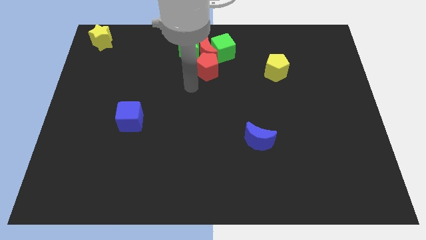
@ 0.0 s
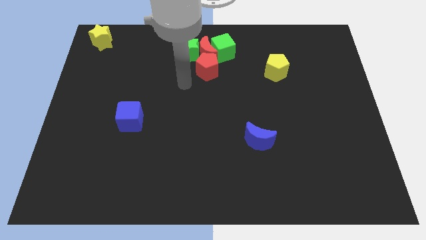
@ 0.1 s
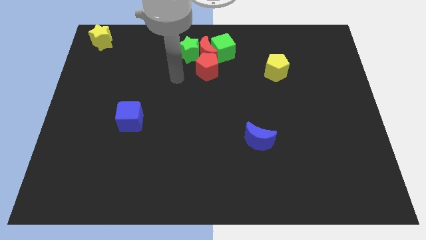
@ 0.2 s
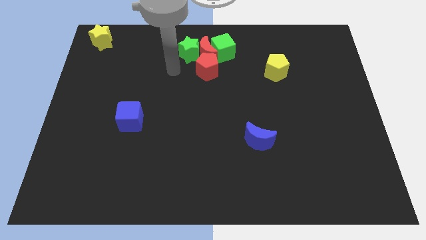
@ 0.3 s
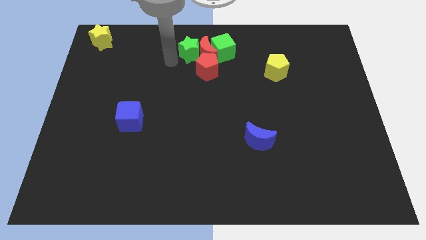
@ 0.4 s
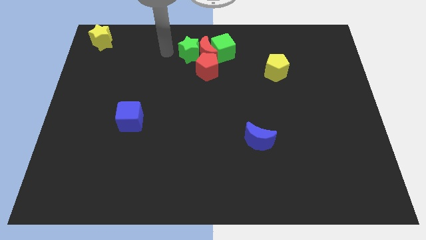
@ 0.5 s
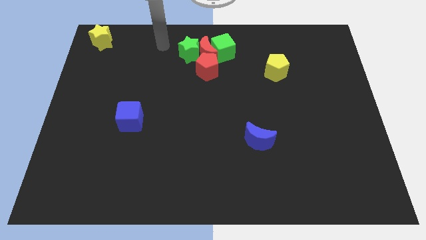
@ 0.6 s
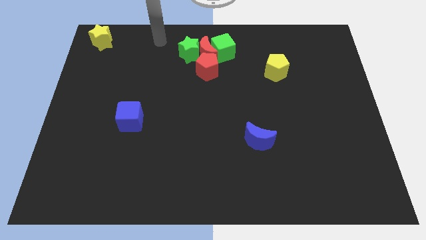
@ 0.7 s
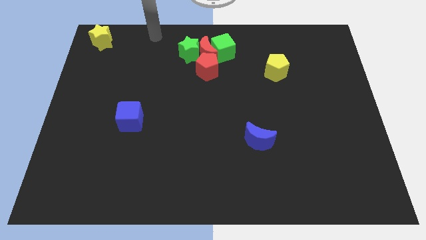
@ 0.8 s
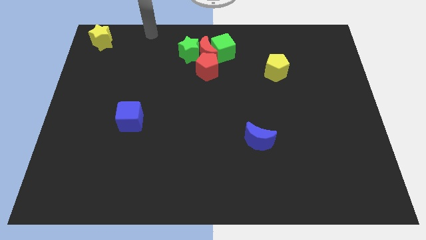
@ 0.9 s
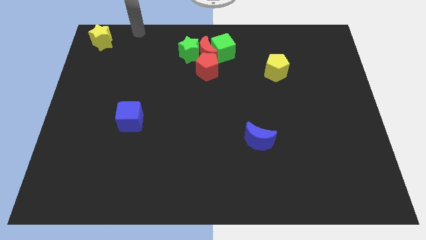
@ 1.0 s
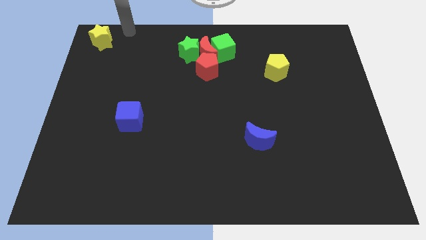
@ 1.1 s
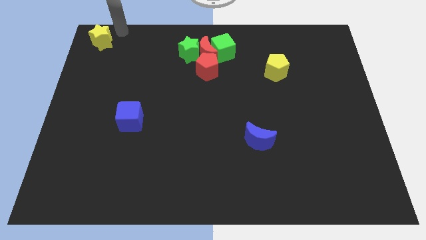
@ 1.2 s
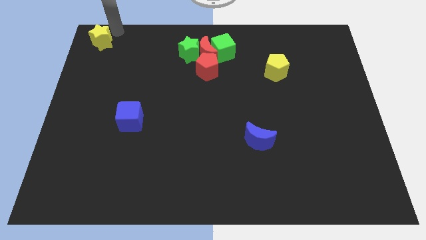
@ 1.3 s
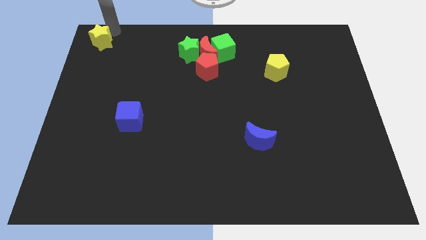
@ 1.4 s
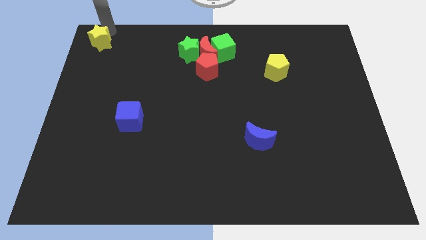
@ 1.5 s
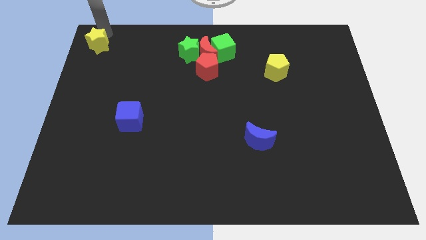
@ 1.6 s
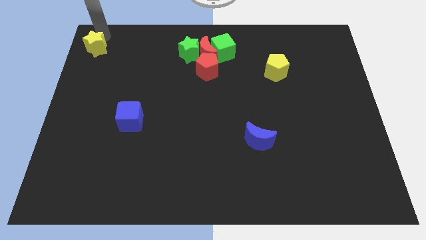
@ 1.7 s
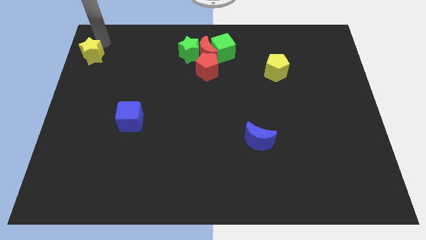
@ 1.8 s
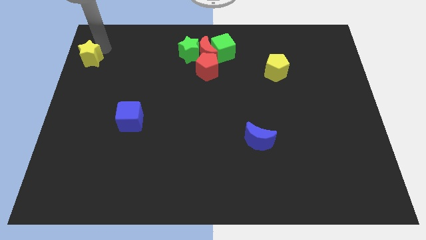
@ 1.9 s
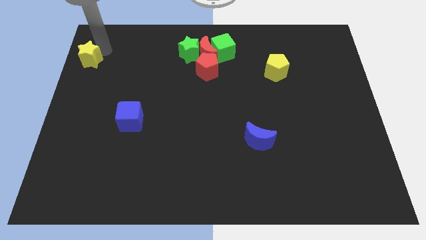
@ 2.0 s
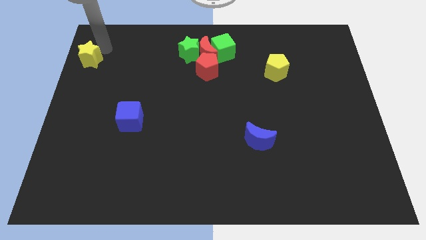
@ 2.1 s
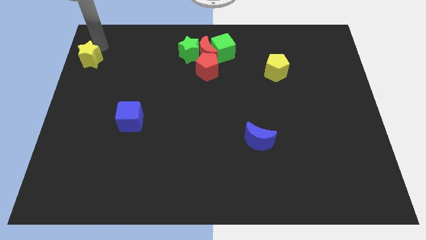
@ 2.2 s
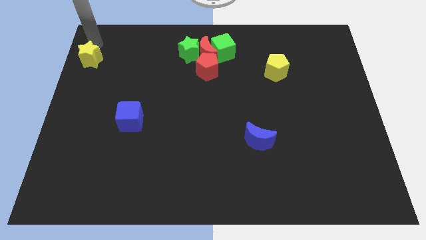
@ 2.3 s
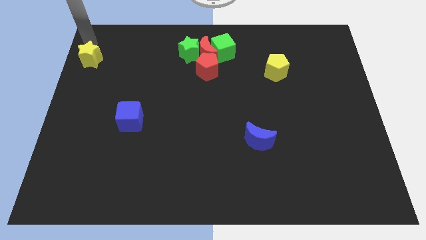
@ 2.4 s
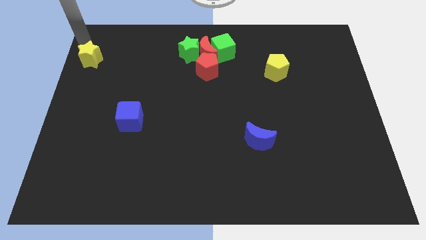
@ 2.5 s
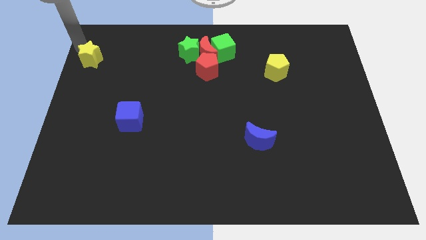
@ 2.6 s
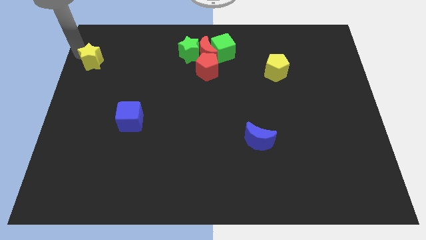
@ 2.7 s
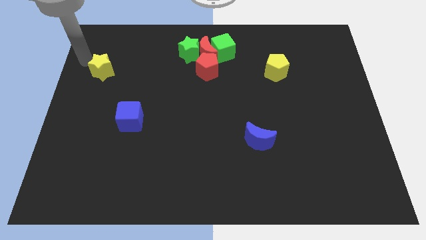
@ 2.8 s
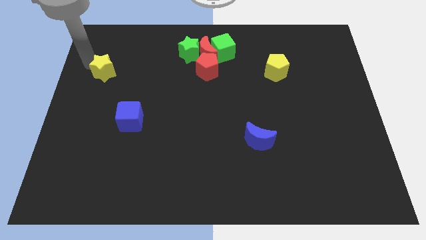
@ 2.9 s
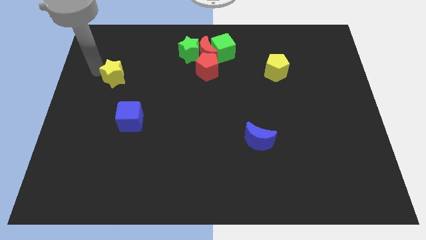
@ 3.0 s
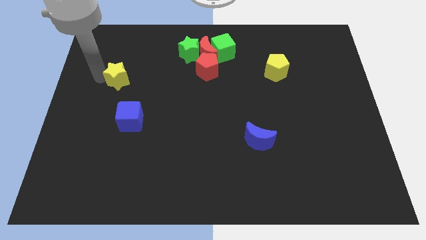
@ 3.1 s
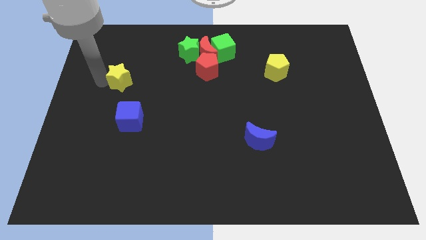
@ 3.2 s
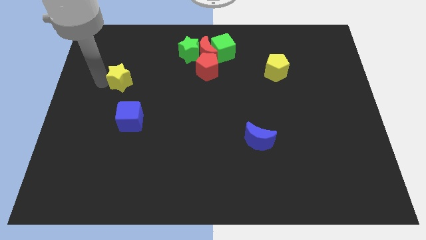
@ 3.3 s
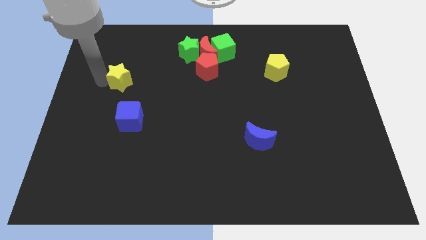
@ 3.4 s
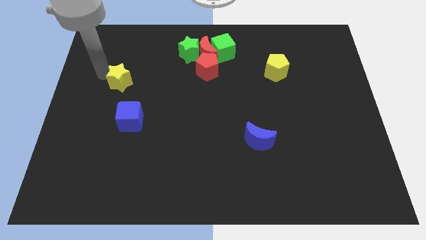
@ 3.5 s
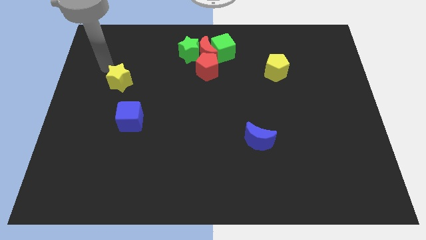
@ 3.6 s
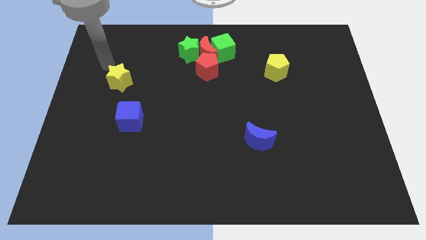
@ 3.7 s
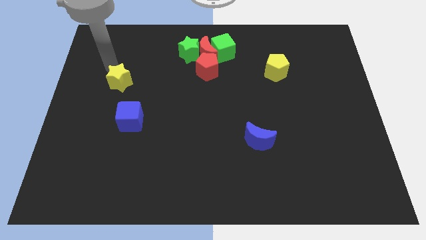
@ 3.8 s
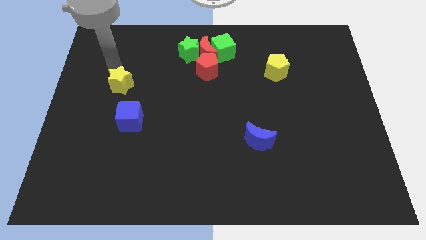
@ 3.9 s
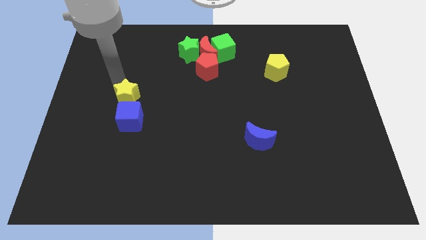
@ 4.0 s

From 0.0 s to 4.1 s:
place the yellow star above the blue cube

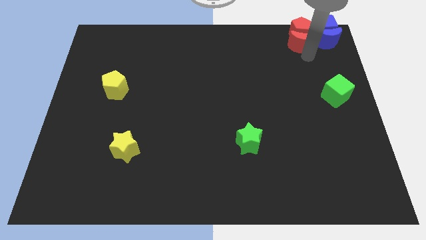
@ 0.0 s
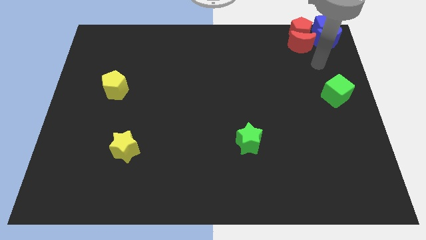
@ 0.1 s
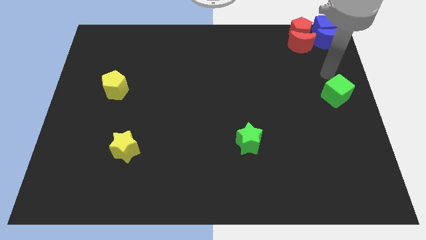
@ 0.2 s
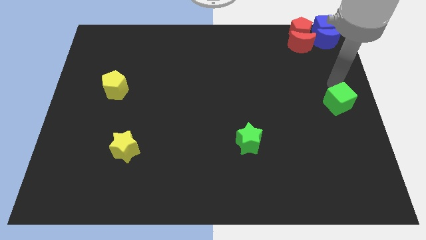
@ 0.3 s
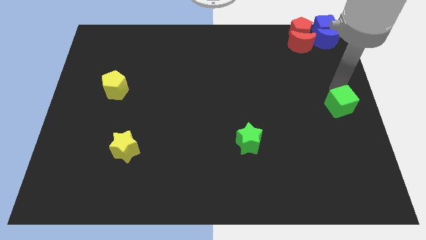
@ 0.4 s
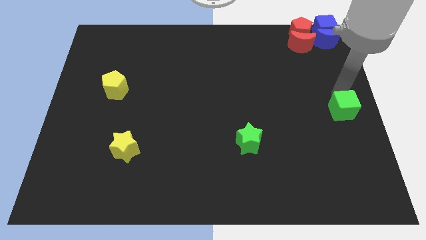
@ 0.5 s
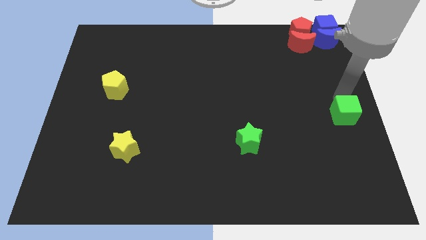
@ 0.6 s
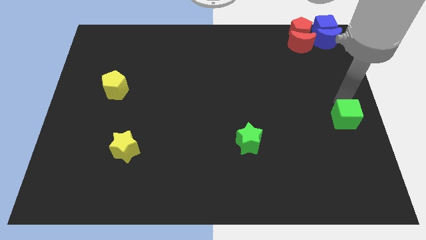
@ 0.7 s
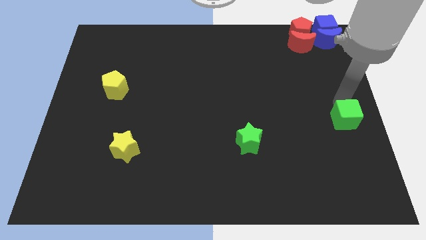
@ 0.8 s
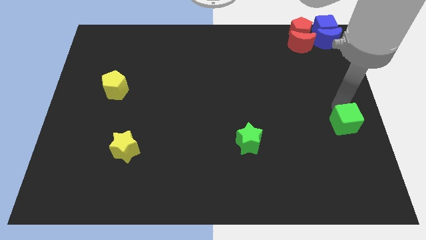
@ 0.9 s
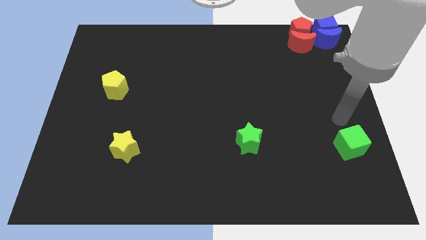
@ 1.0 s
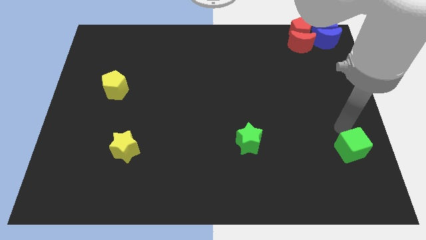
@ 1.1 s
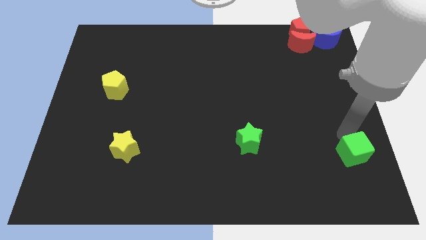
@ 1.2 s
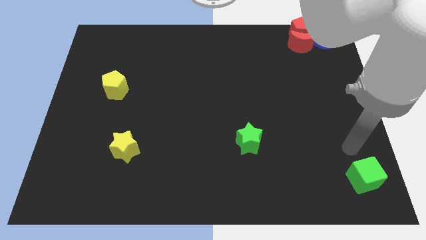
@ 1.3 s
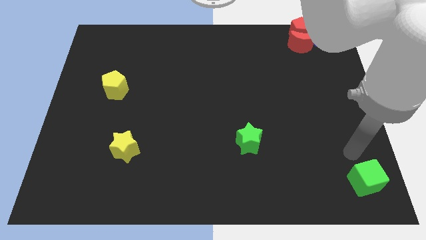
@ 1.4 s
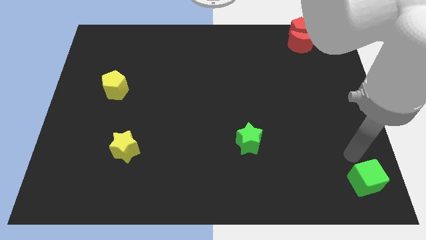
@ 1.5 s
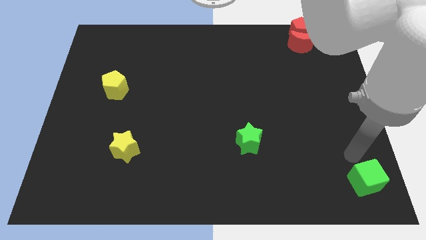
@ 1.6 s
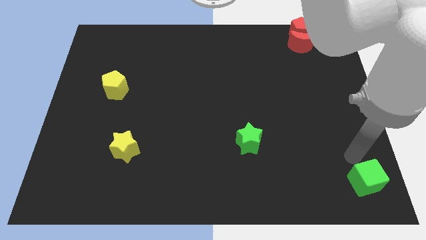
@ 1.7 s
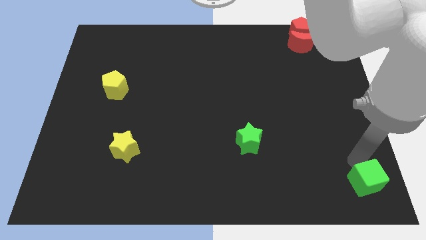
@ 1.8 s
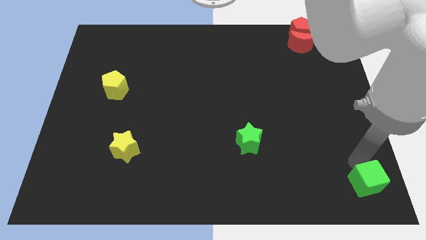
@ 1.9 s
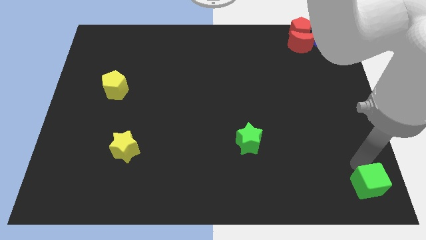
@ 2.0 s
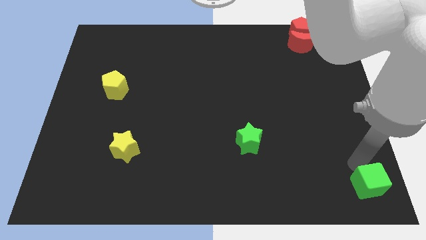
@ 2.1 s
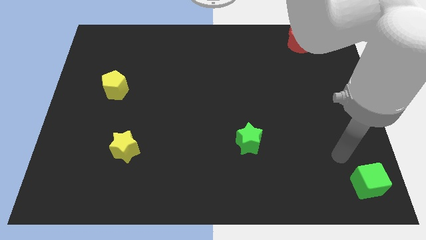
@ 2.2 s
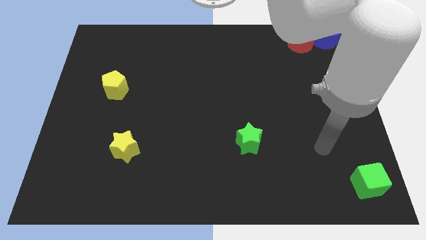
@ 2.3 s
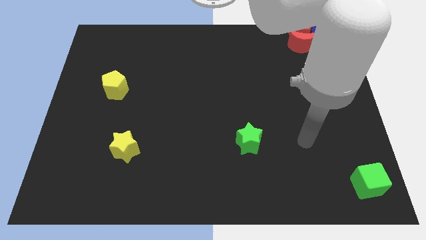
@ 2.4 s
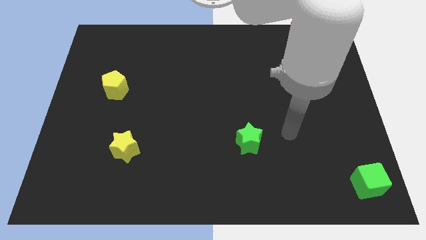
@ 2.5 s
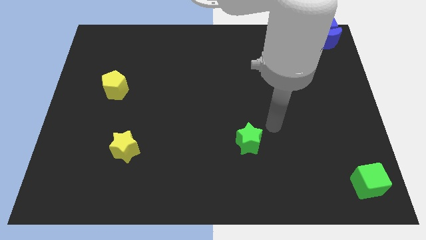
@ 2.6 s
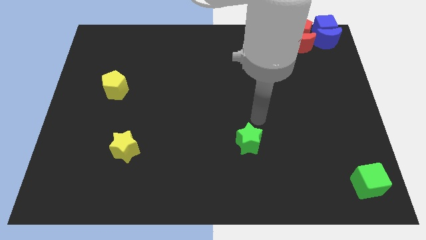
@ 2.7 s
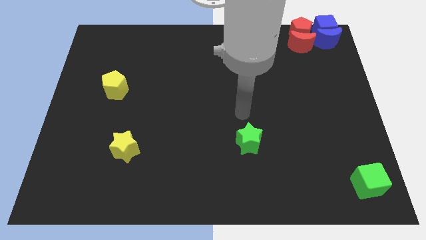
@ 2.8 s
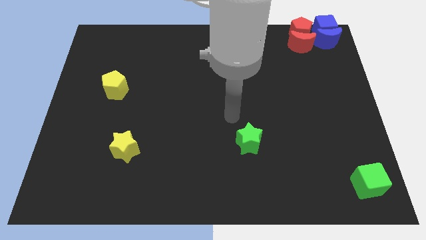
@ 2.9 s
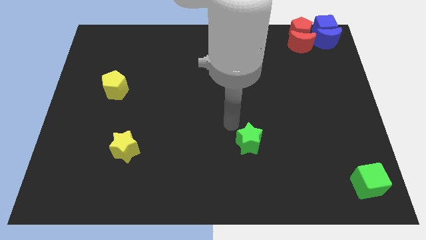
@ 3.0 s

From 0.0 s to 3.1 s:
move green cube at bottom right

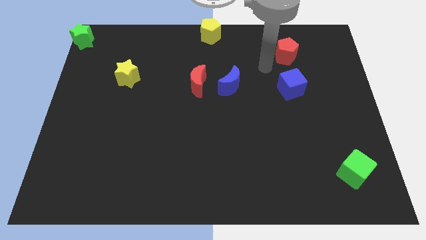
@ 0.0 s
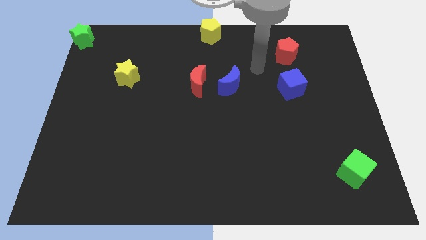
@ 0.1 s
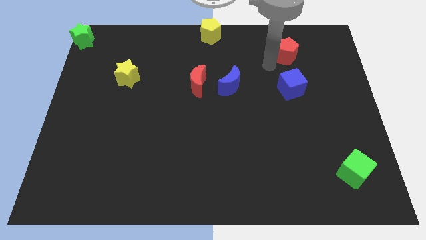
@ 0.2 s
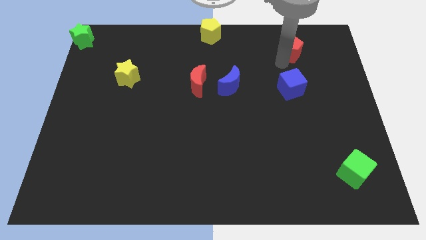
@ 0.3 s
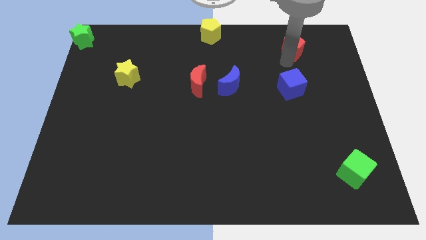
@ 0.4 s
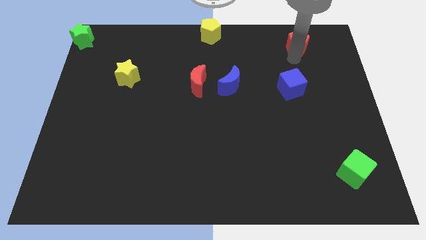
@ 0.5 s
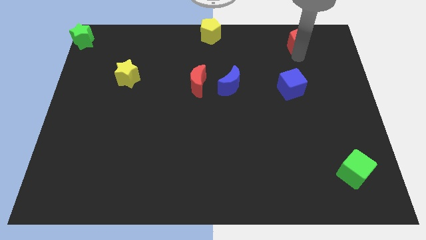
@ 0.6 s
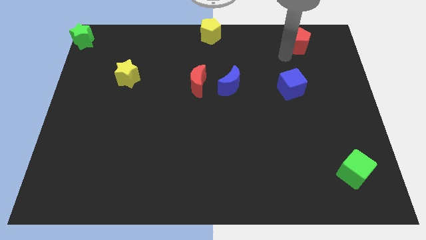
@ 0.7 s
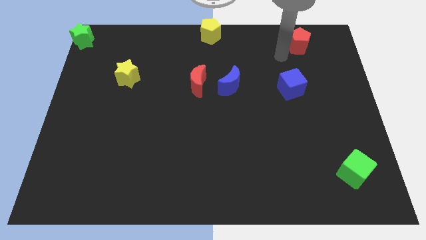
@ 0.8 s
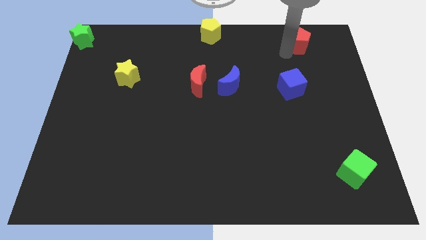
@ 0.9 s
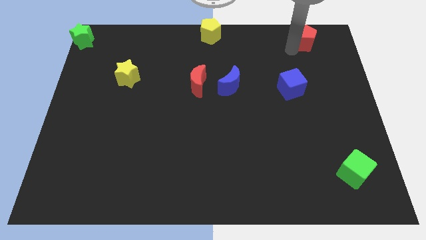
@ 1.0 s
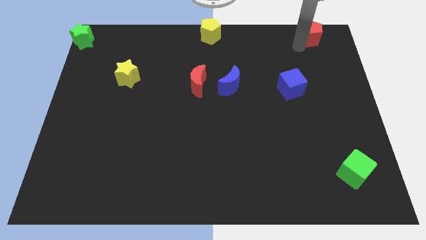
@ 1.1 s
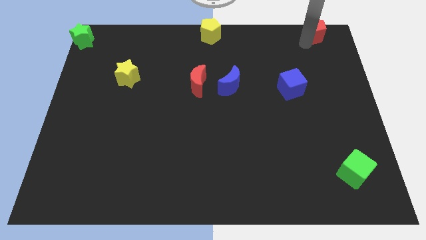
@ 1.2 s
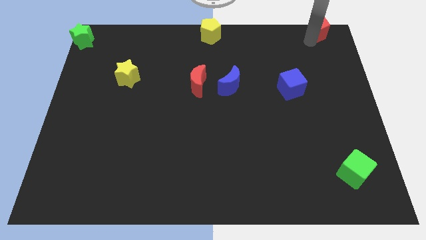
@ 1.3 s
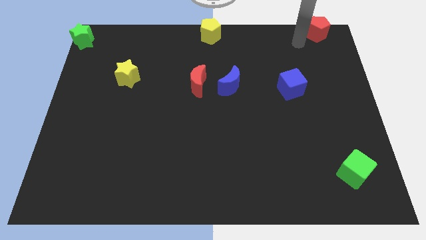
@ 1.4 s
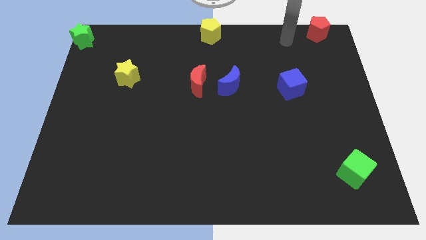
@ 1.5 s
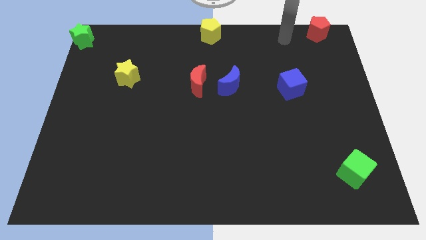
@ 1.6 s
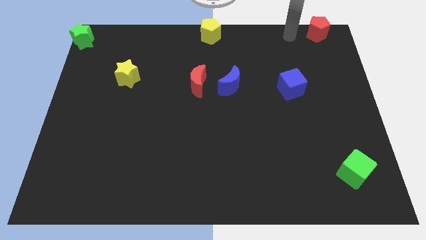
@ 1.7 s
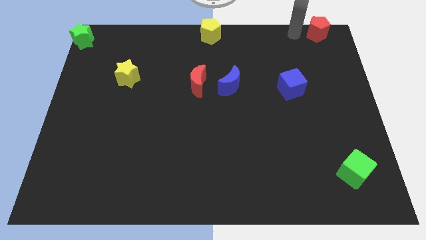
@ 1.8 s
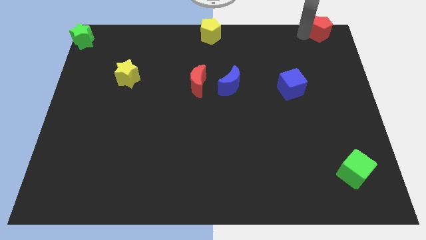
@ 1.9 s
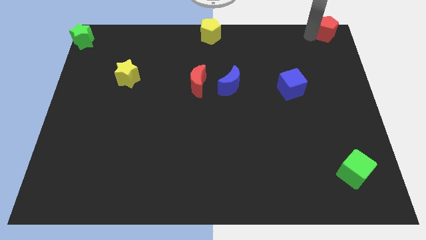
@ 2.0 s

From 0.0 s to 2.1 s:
push red pentagon towards top right
